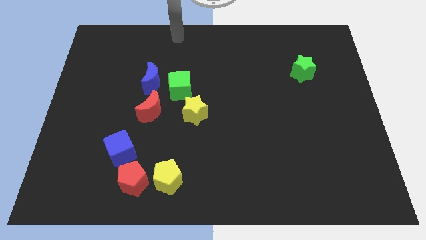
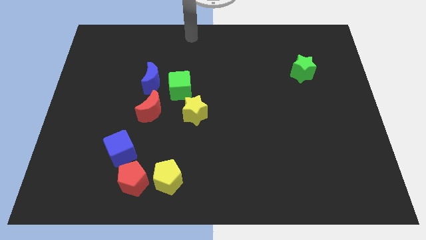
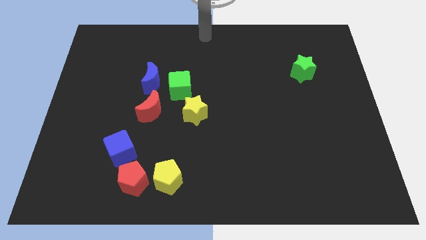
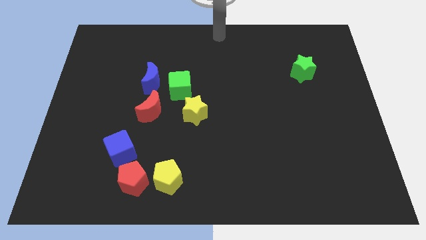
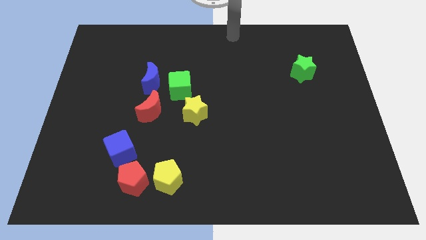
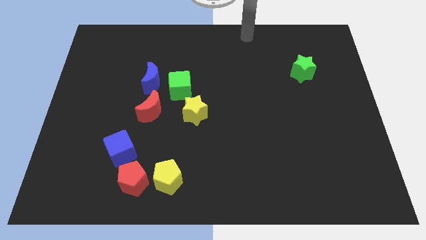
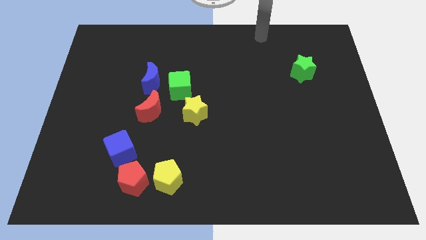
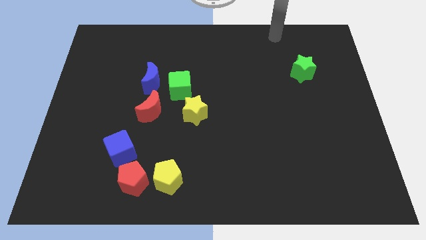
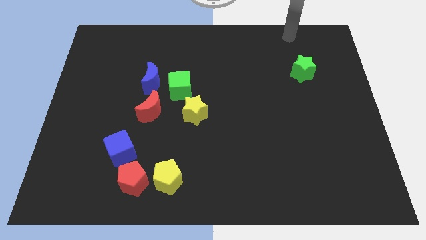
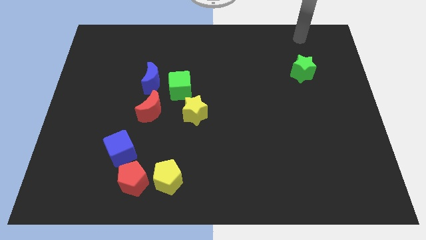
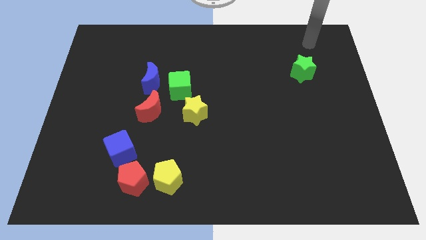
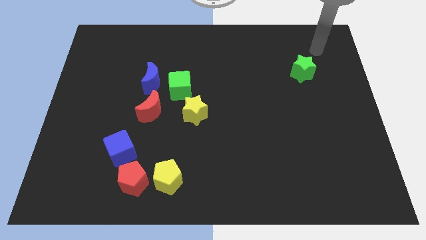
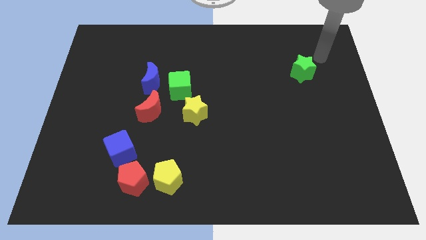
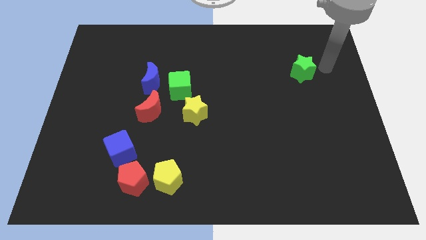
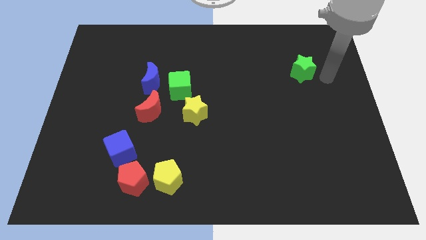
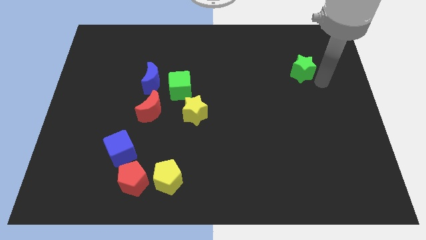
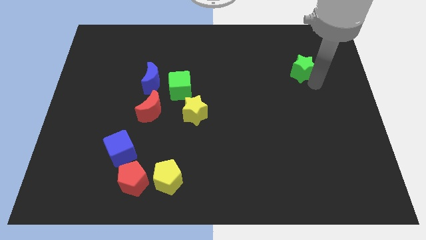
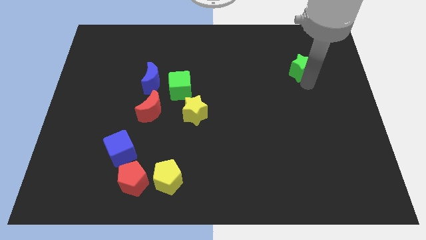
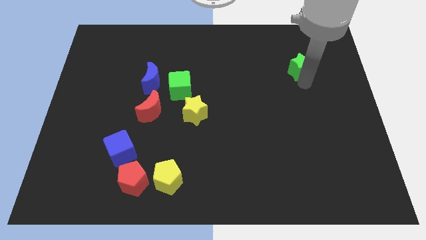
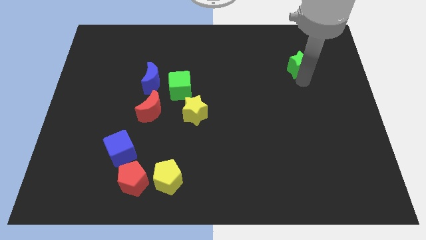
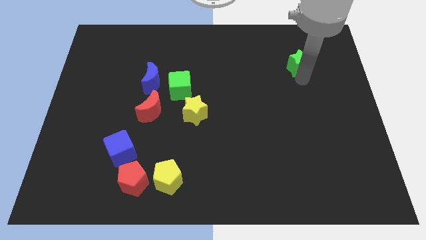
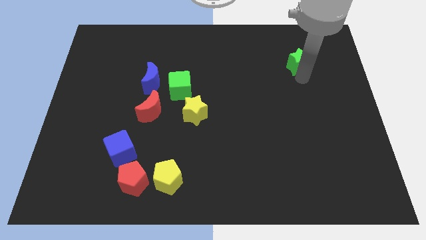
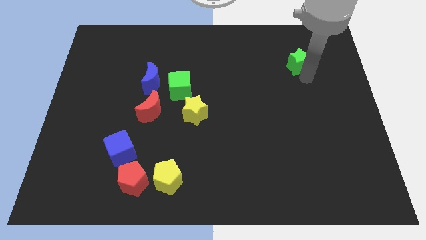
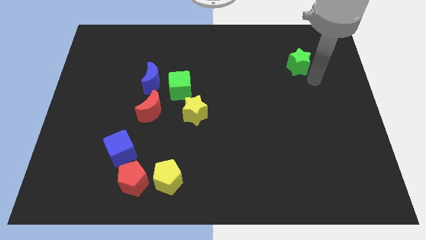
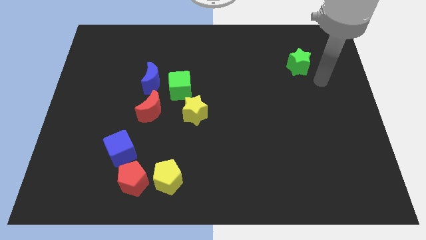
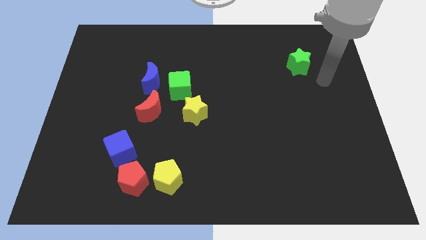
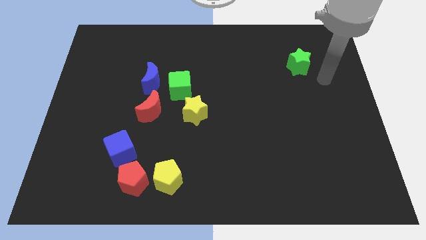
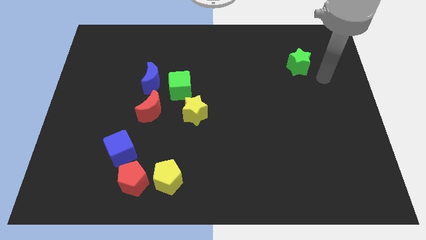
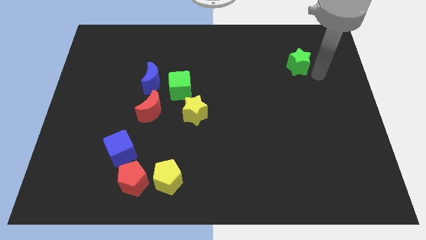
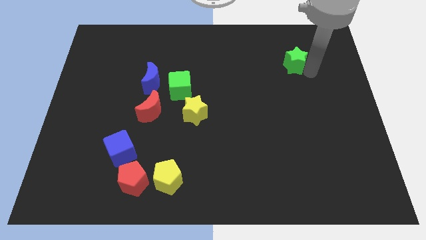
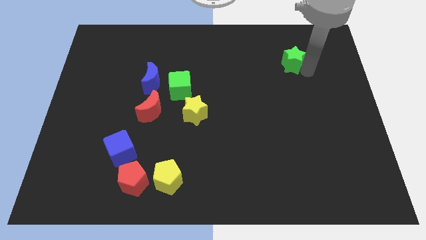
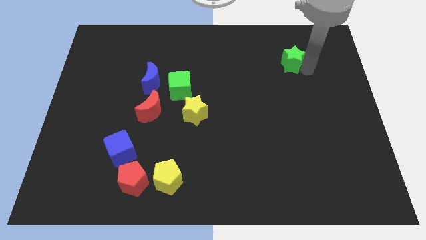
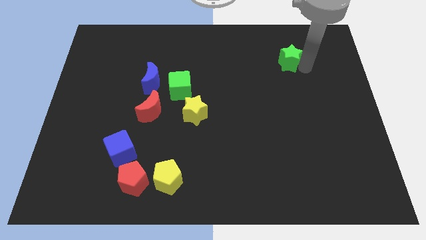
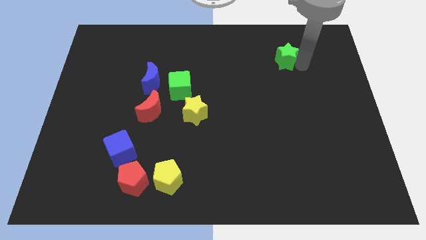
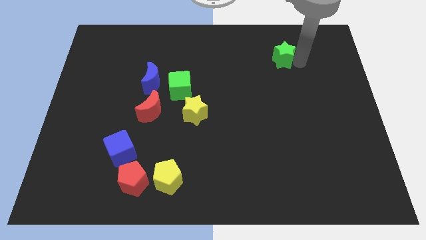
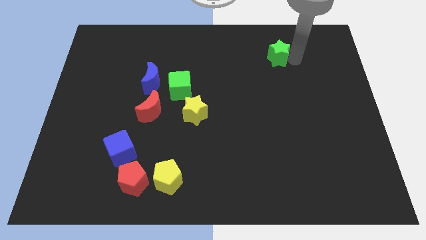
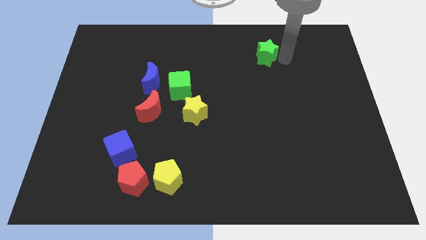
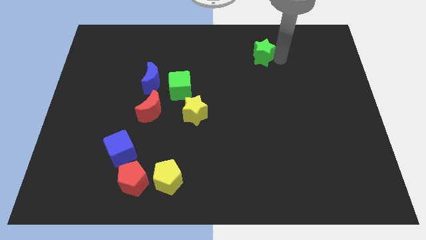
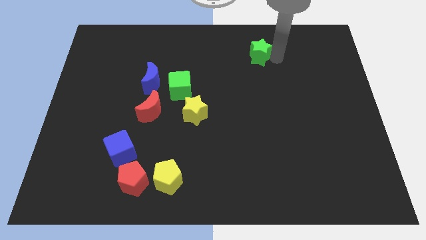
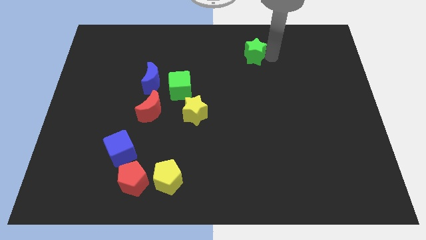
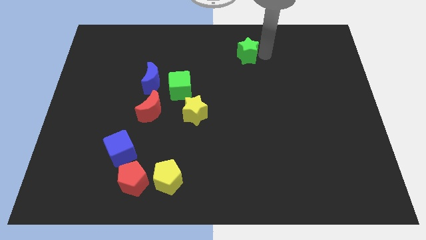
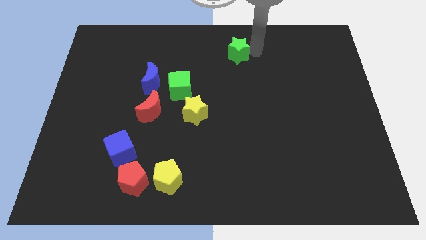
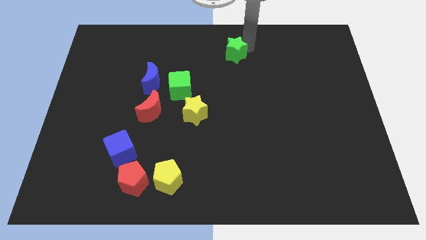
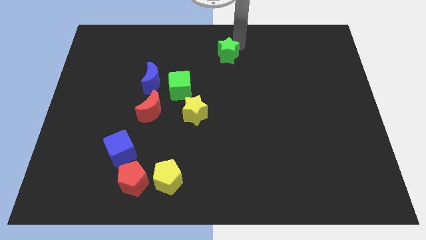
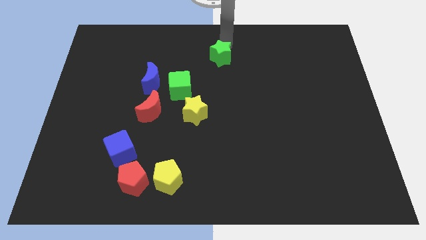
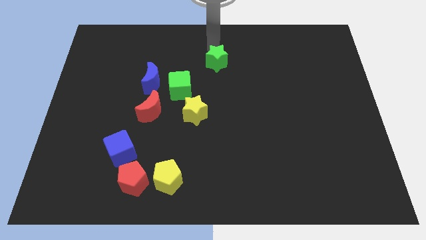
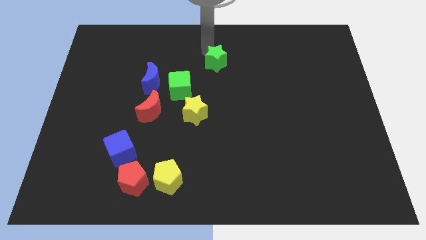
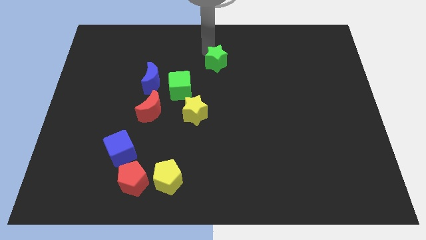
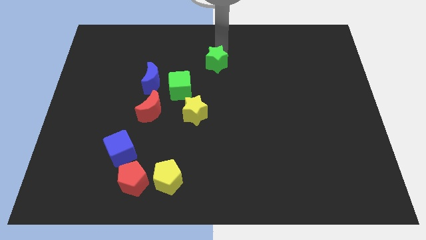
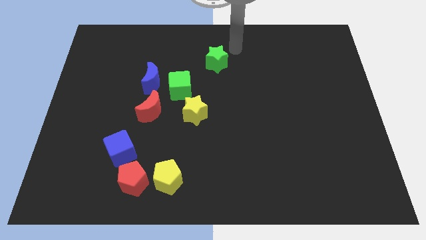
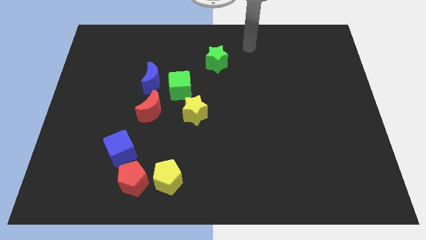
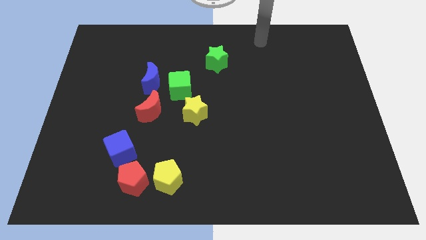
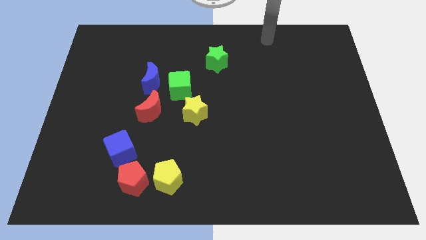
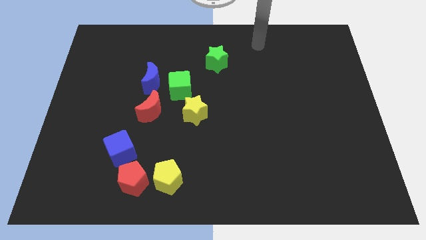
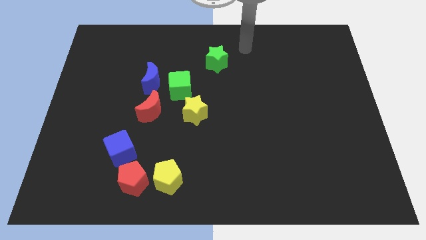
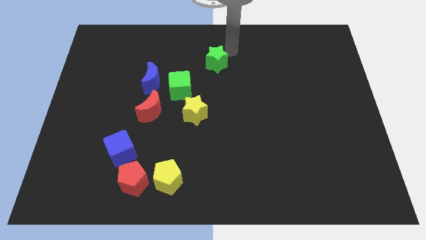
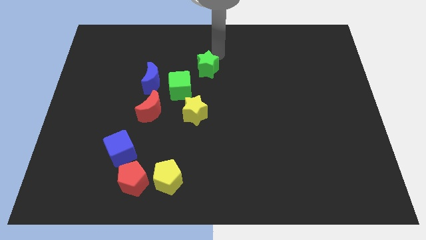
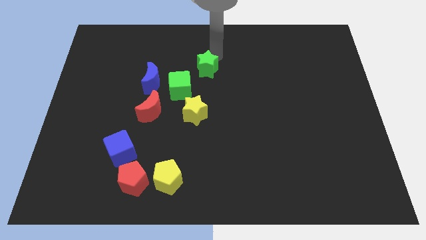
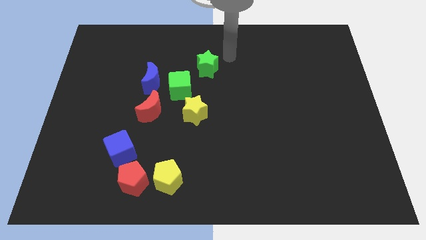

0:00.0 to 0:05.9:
place the green star to the top right of the green cube

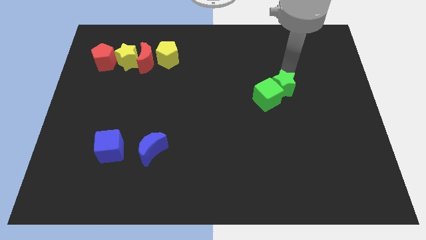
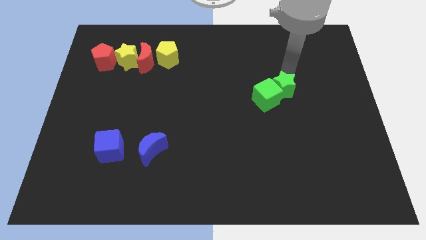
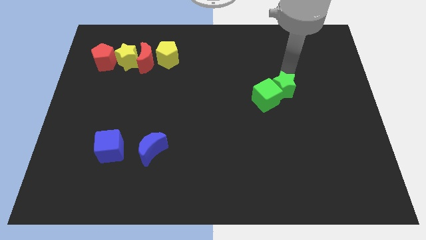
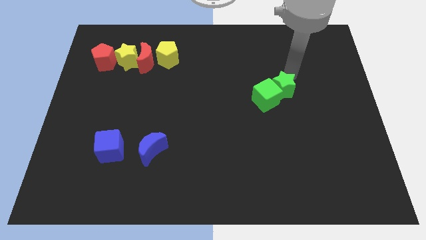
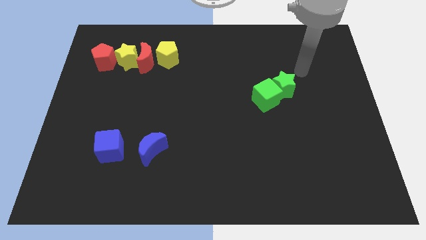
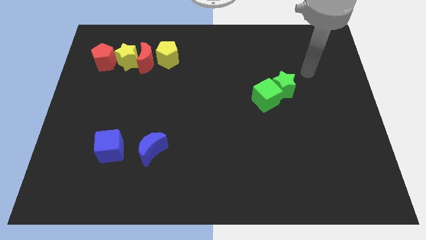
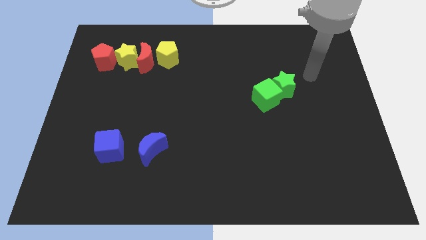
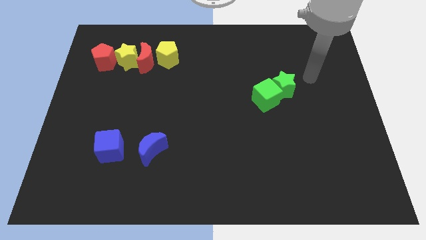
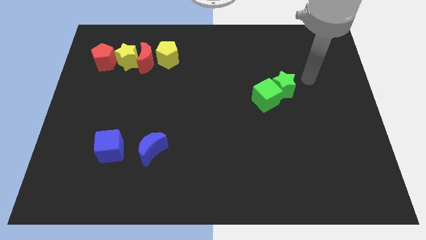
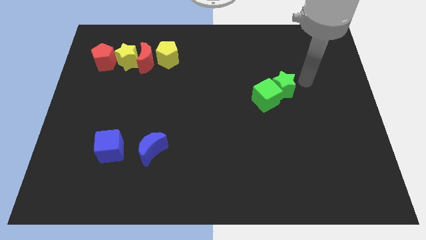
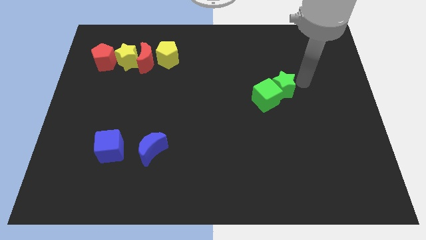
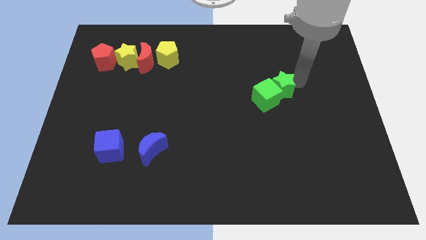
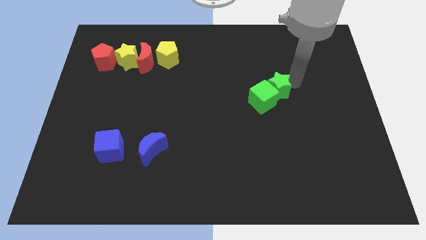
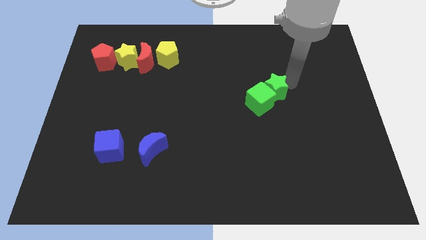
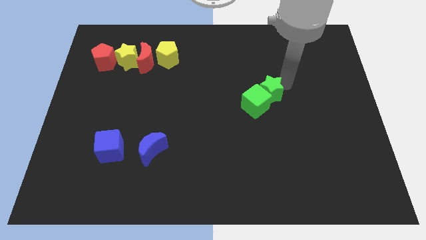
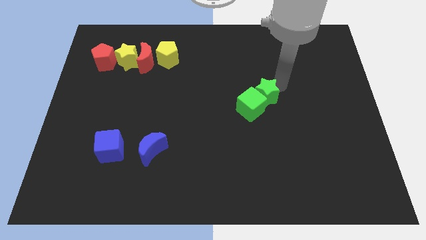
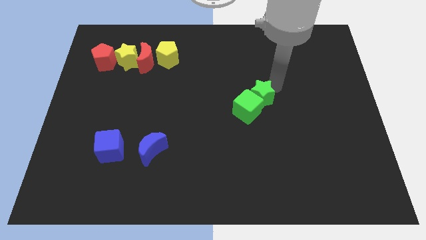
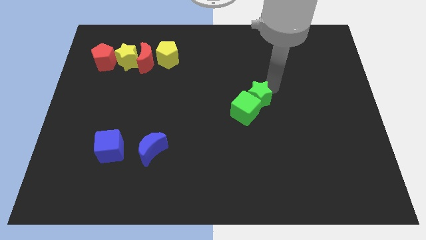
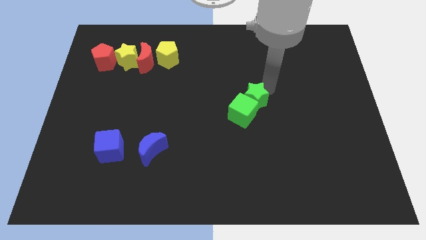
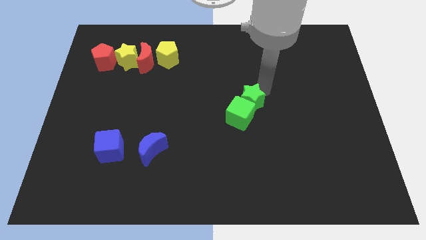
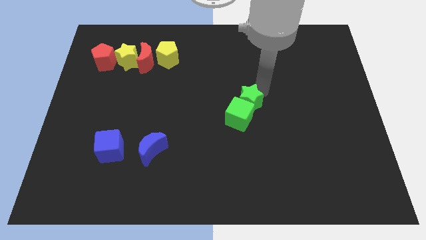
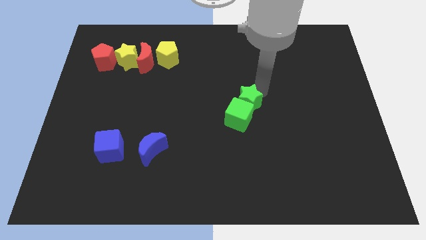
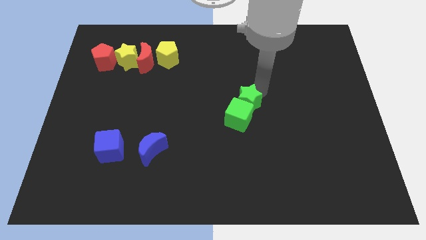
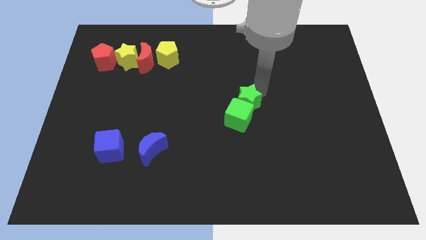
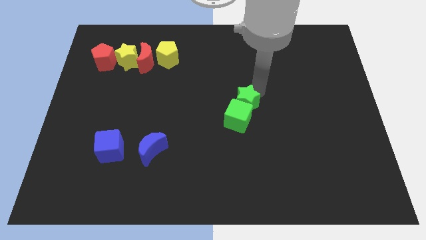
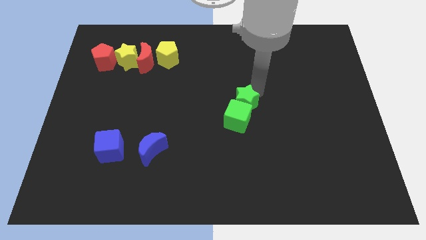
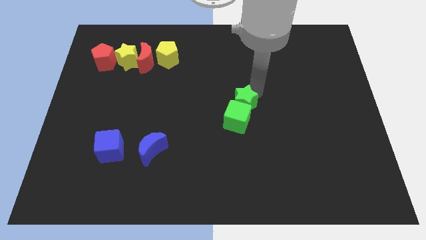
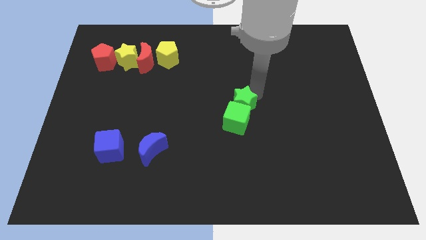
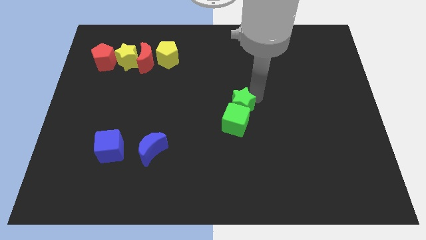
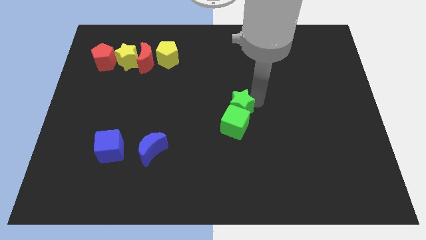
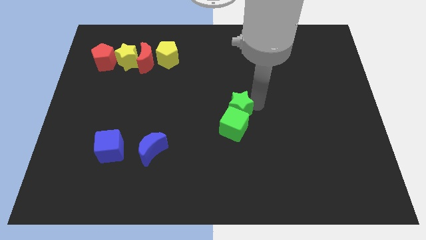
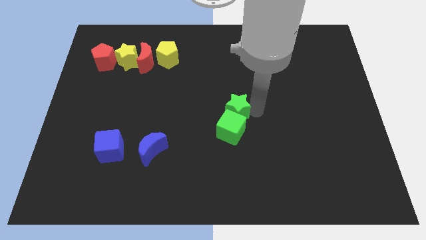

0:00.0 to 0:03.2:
push the green cube with green star to the center of the board
